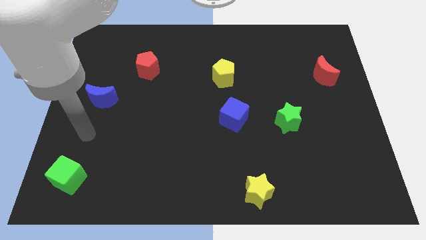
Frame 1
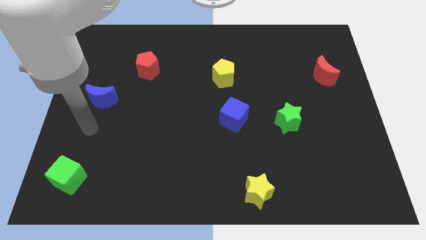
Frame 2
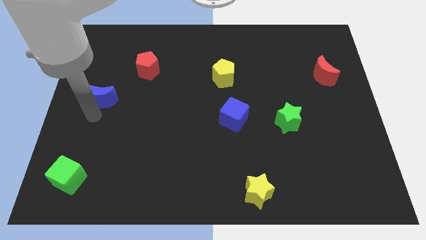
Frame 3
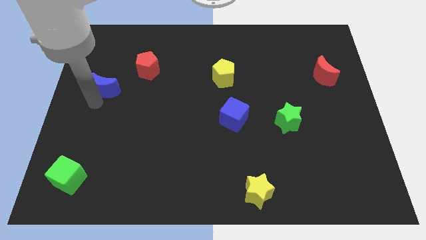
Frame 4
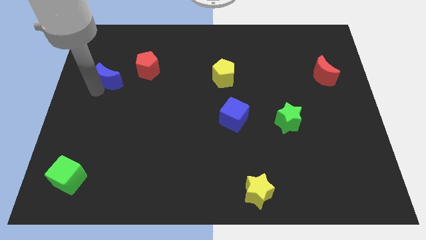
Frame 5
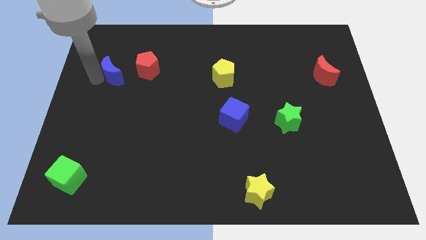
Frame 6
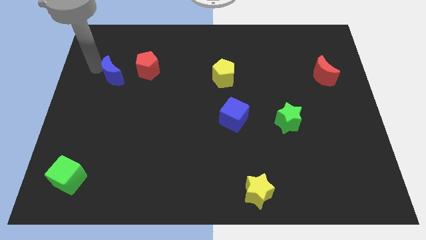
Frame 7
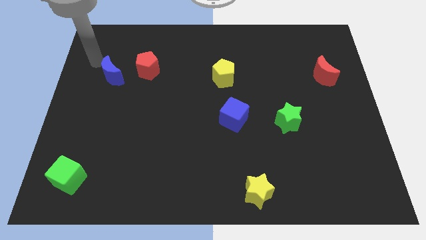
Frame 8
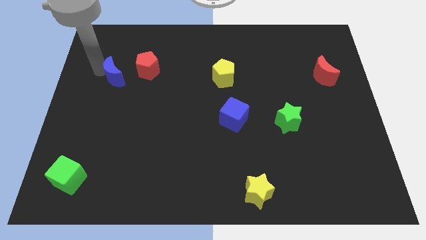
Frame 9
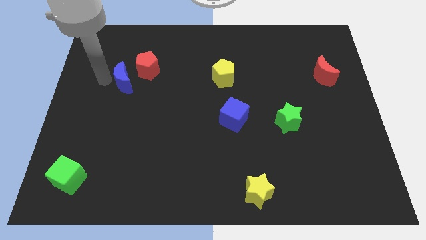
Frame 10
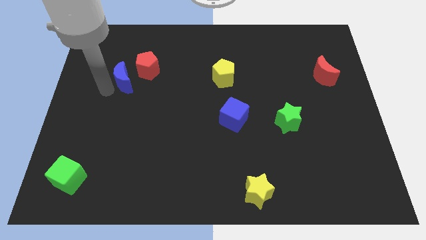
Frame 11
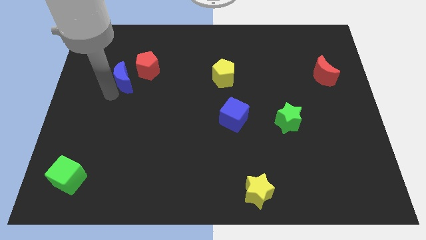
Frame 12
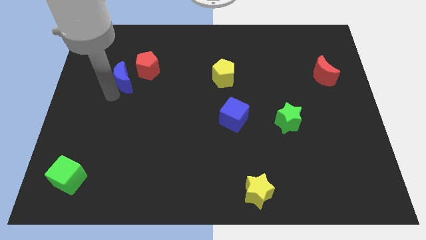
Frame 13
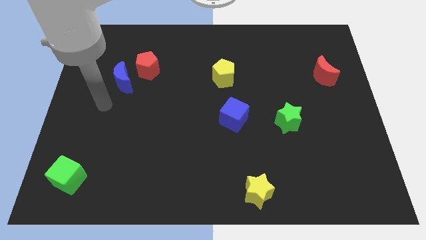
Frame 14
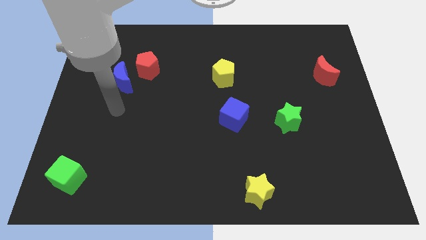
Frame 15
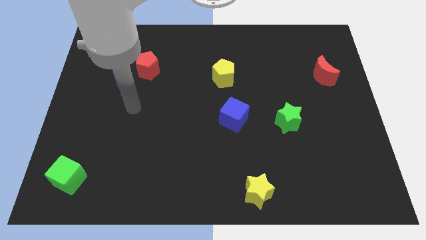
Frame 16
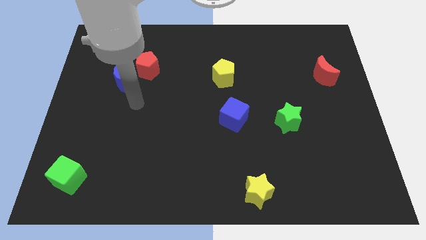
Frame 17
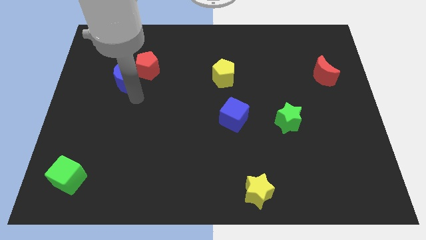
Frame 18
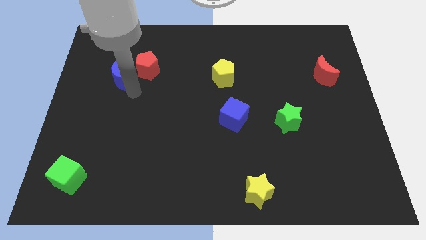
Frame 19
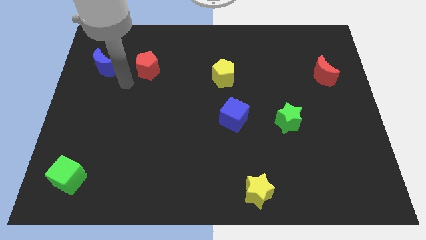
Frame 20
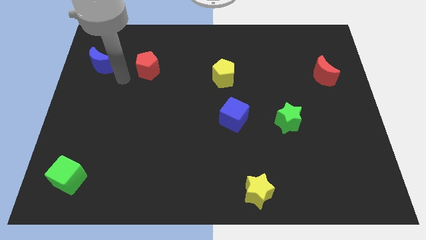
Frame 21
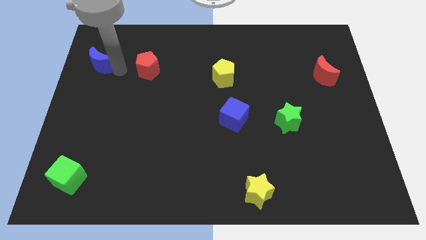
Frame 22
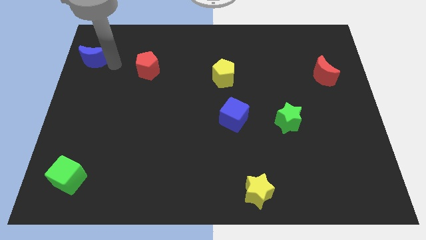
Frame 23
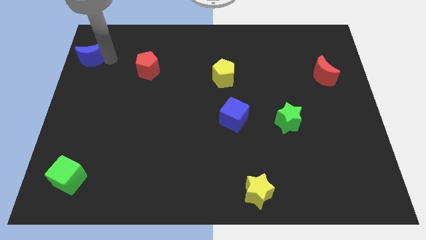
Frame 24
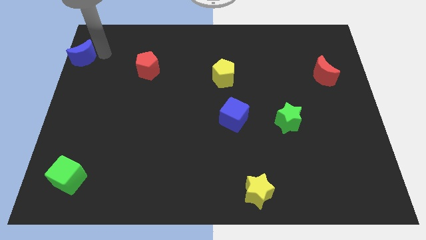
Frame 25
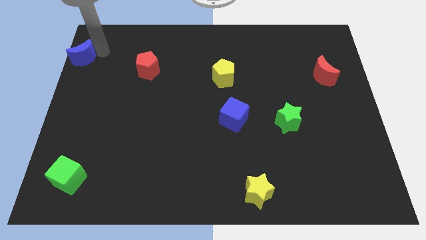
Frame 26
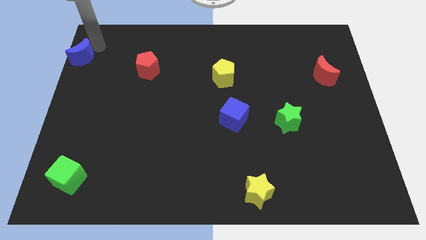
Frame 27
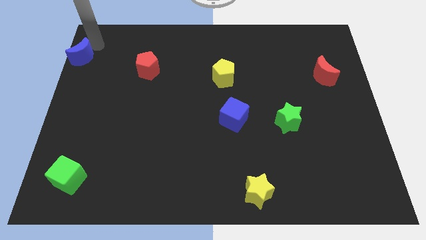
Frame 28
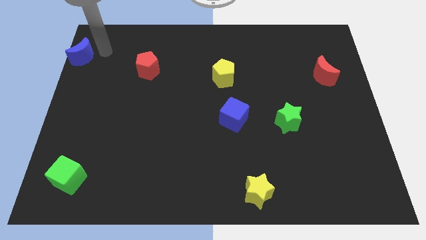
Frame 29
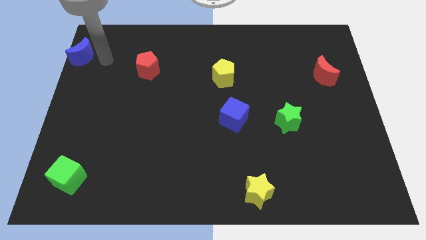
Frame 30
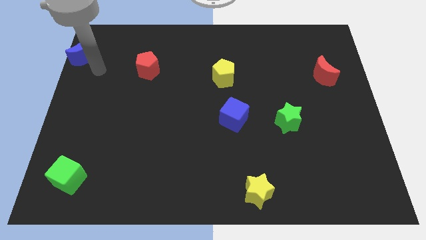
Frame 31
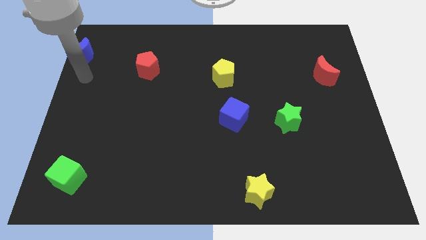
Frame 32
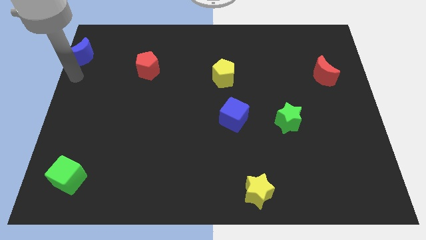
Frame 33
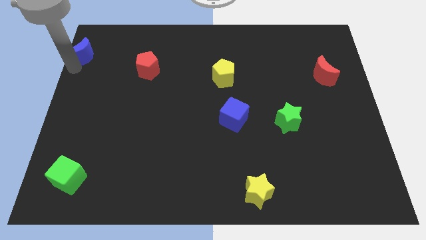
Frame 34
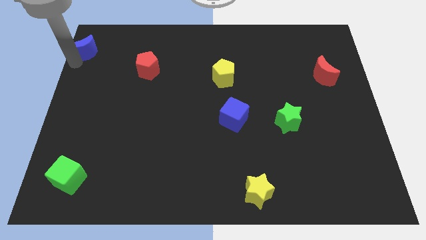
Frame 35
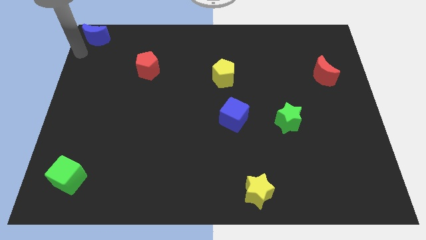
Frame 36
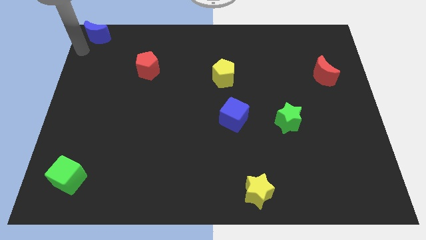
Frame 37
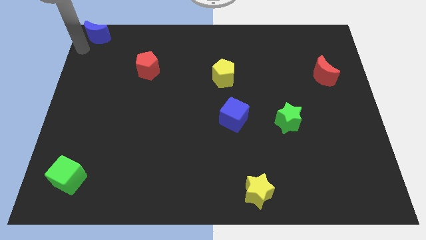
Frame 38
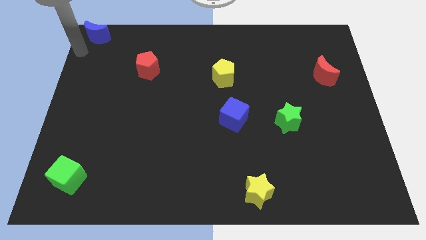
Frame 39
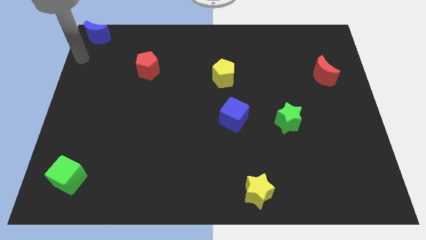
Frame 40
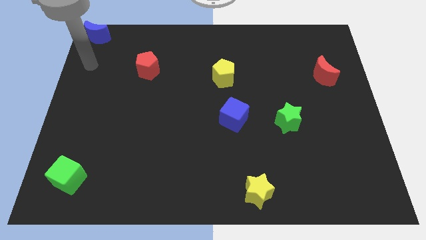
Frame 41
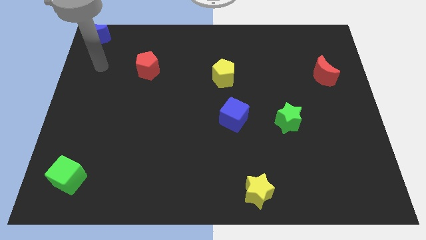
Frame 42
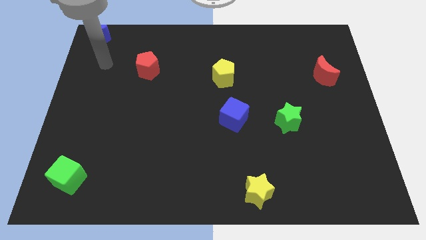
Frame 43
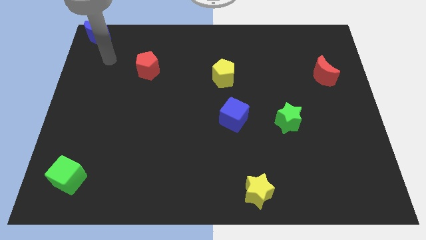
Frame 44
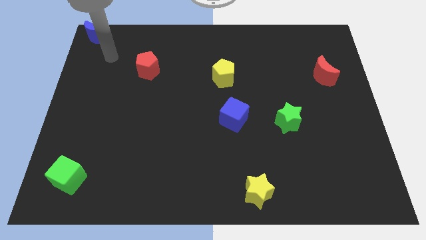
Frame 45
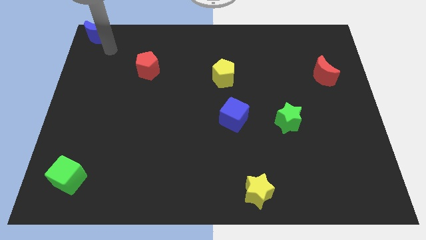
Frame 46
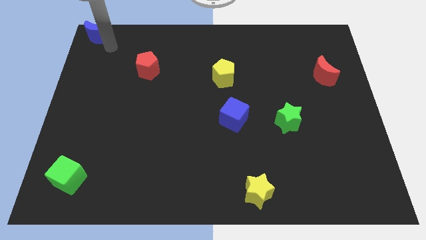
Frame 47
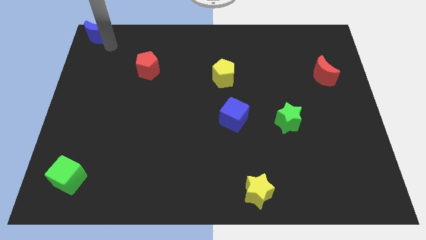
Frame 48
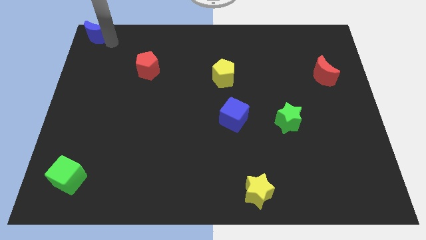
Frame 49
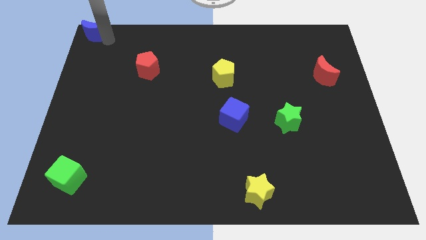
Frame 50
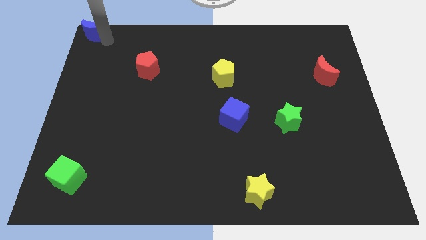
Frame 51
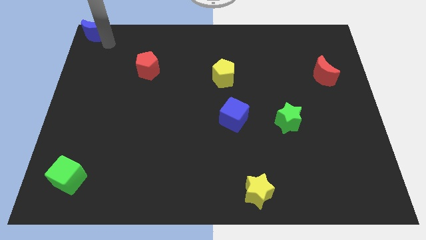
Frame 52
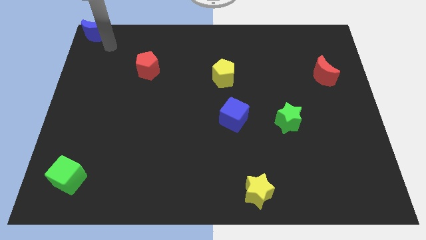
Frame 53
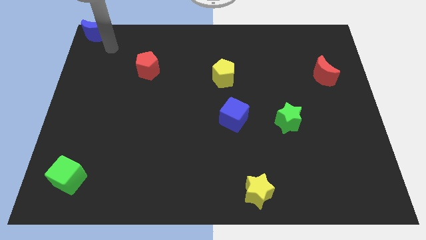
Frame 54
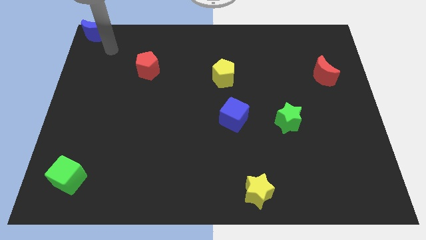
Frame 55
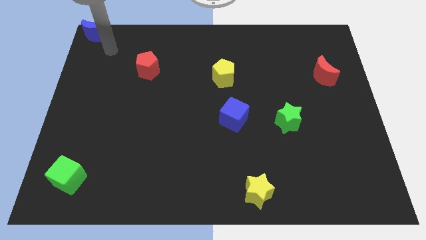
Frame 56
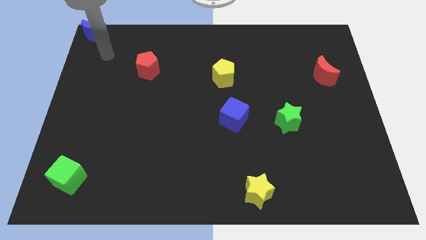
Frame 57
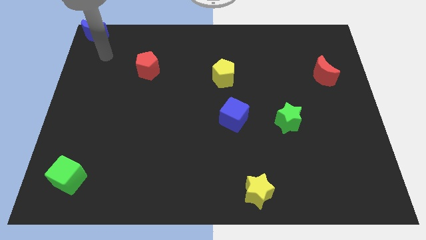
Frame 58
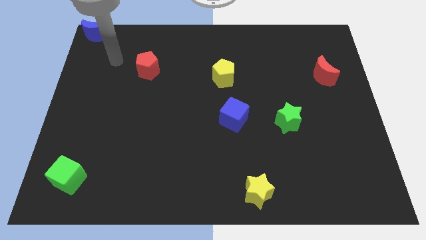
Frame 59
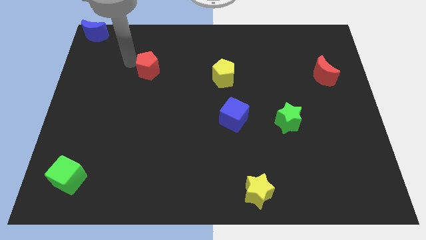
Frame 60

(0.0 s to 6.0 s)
move the blue moon to the top left corner of the board

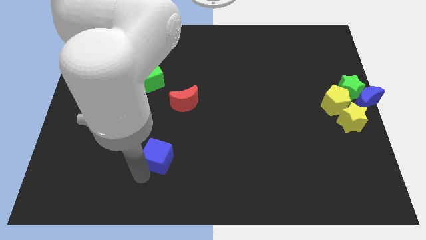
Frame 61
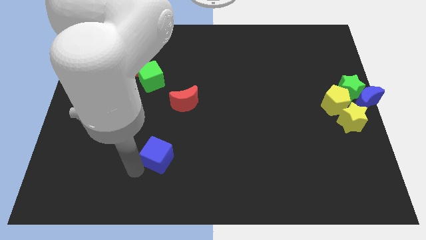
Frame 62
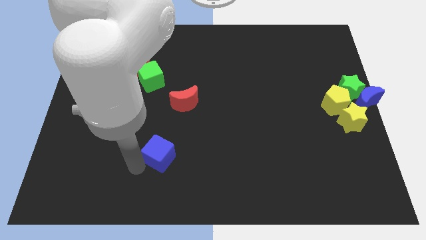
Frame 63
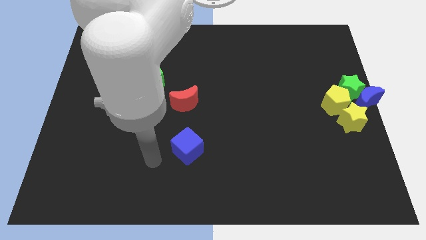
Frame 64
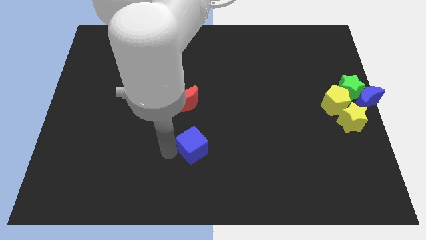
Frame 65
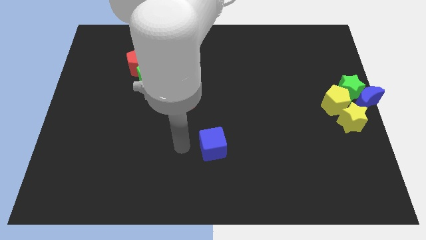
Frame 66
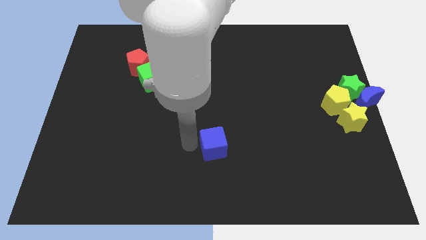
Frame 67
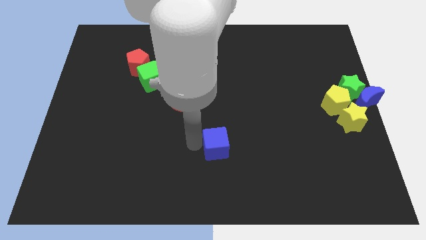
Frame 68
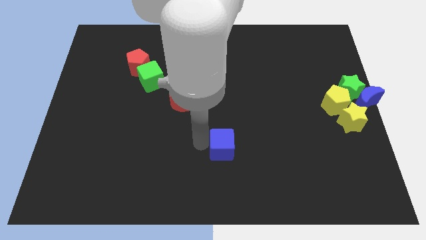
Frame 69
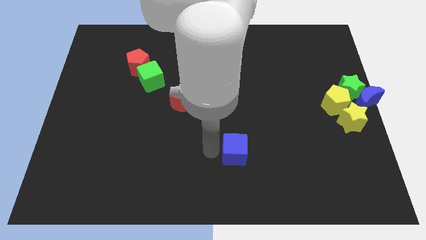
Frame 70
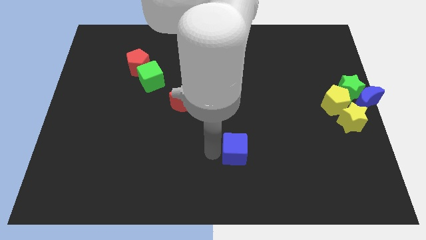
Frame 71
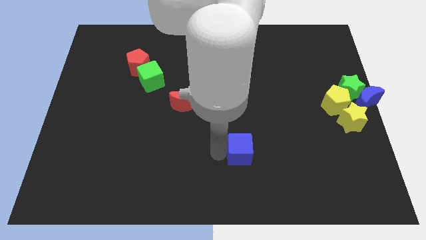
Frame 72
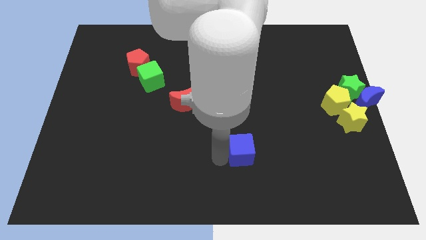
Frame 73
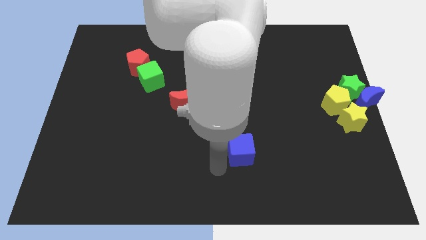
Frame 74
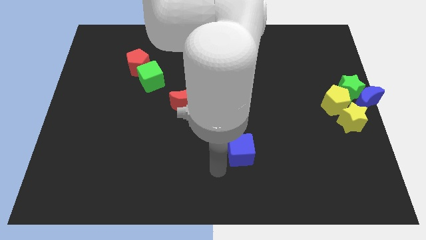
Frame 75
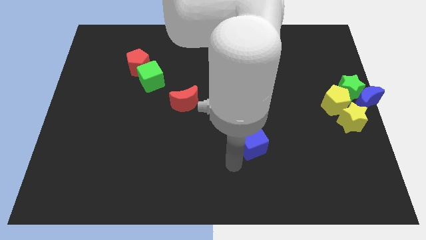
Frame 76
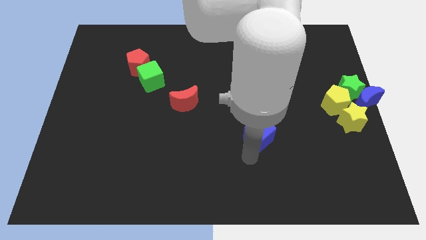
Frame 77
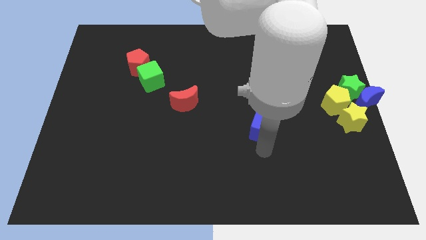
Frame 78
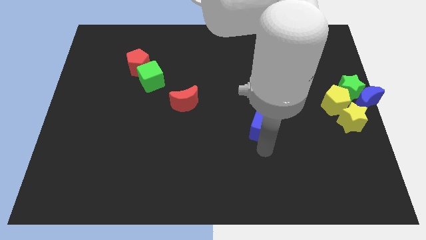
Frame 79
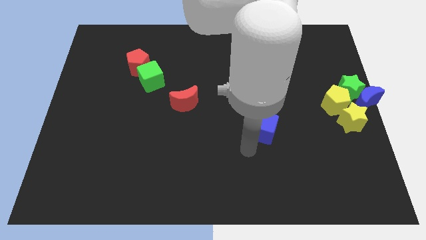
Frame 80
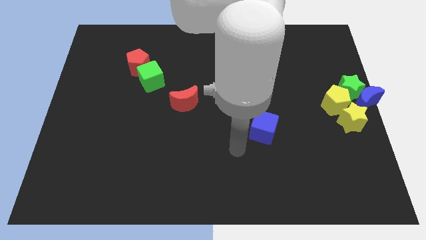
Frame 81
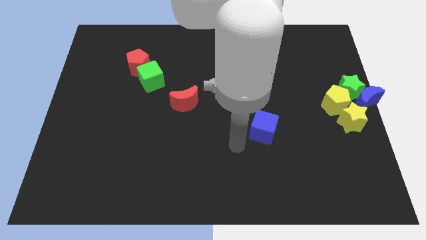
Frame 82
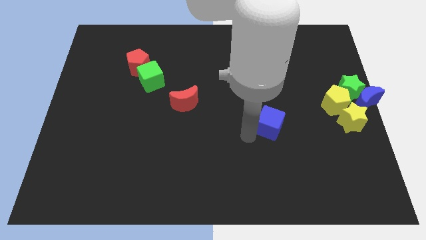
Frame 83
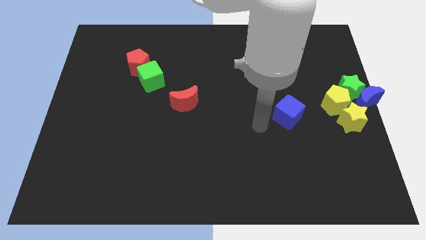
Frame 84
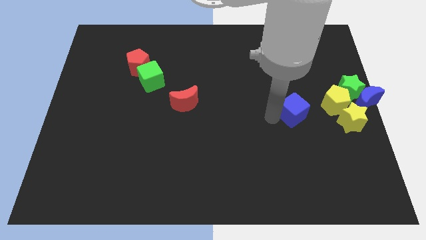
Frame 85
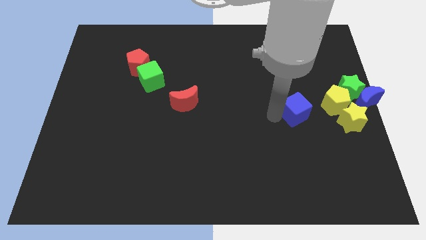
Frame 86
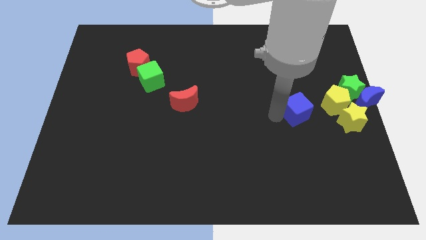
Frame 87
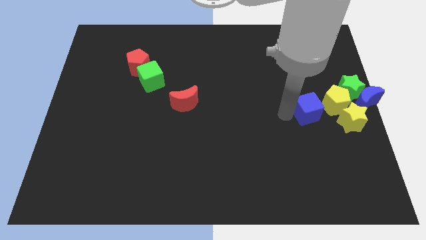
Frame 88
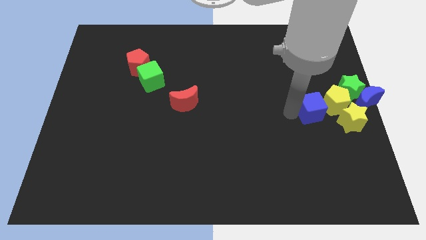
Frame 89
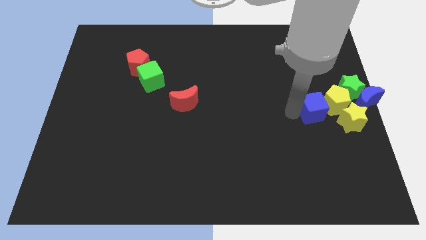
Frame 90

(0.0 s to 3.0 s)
move the blue cube to the left of yellow blocks

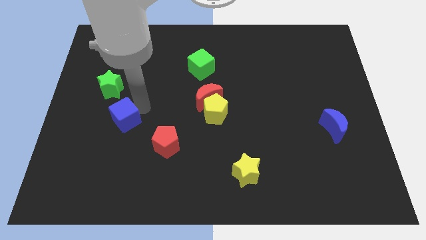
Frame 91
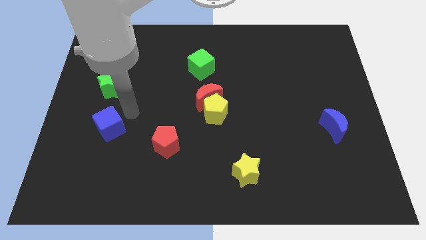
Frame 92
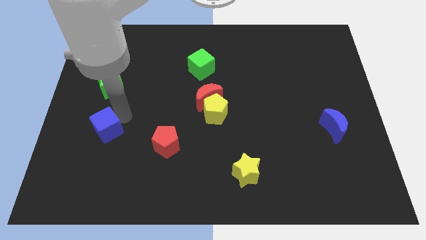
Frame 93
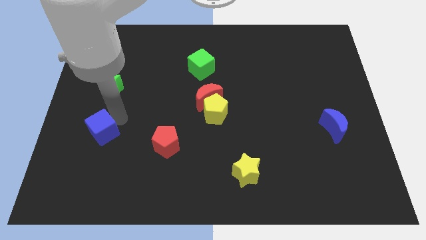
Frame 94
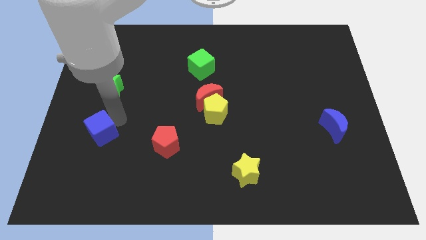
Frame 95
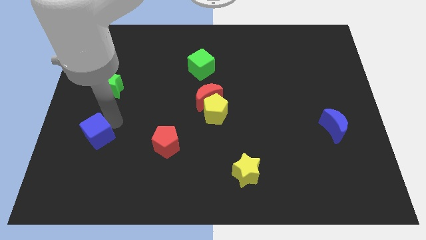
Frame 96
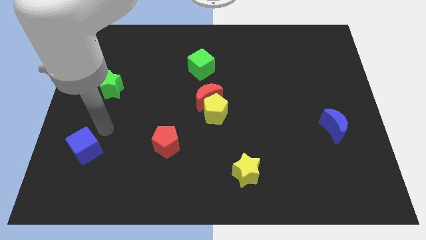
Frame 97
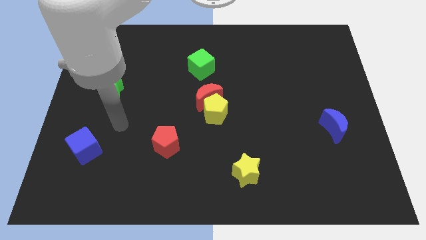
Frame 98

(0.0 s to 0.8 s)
place the blue cube to the left of the red pentagon
